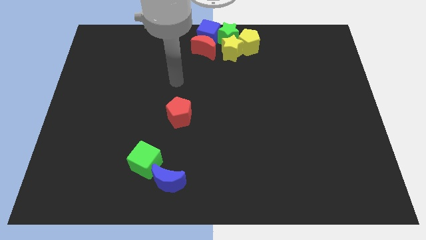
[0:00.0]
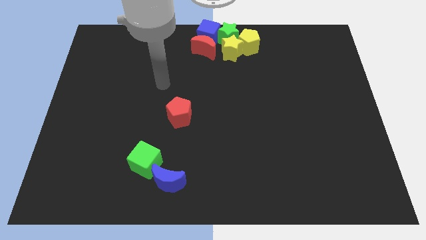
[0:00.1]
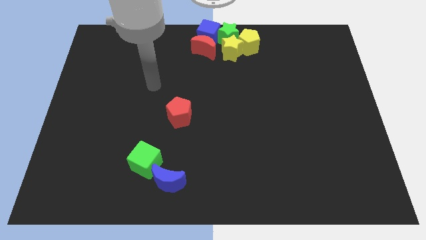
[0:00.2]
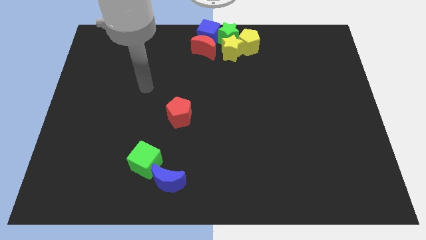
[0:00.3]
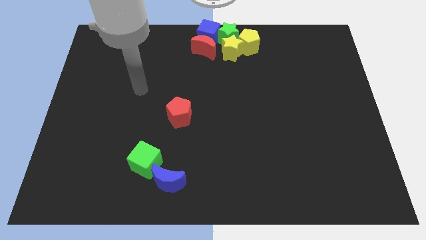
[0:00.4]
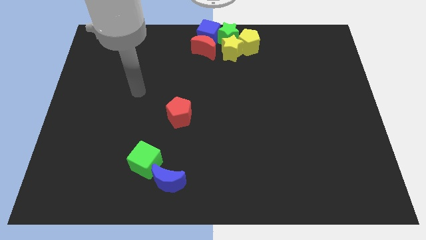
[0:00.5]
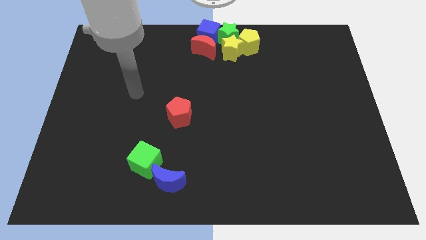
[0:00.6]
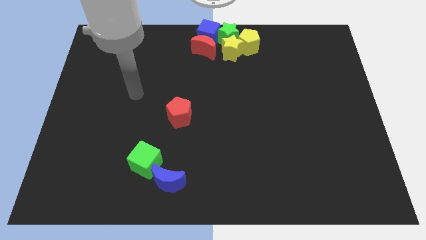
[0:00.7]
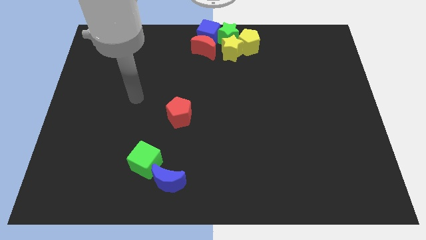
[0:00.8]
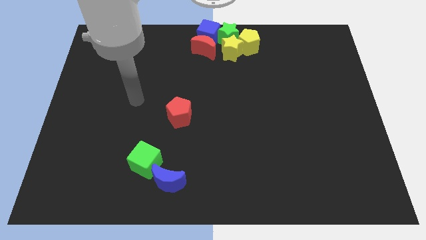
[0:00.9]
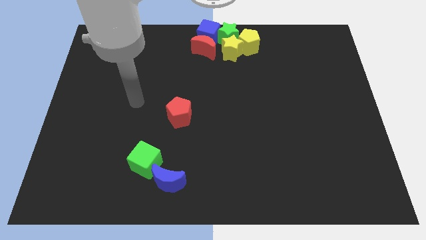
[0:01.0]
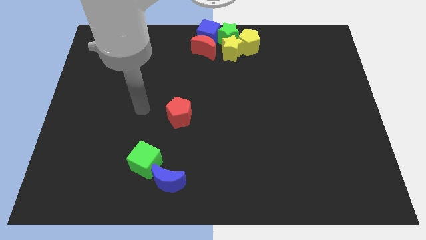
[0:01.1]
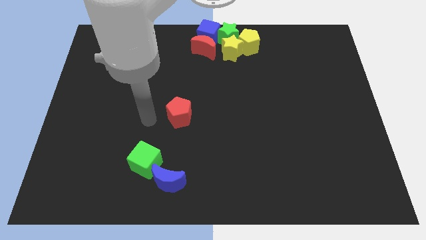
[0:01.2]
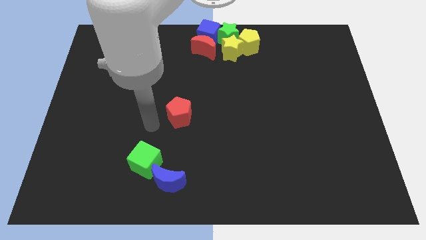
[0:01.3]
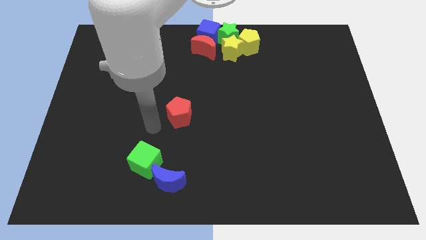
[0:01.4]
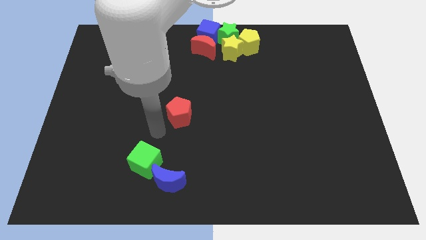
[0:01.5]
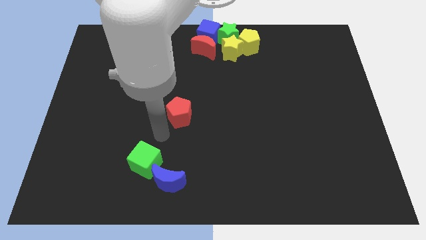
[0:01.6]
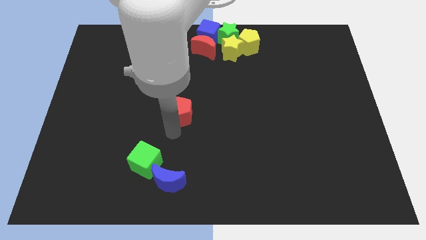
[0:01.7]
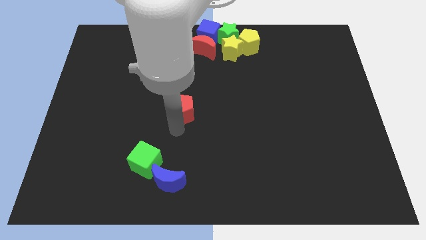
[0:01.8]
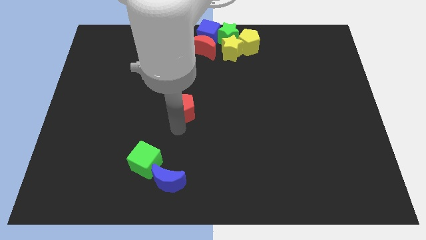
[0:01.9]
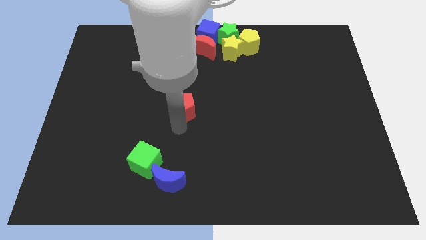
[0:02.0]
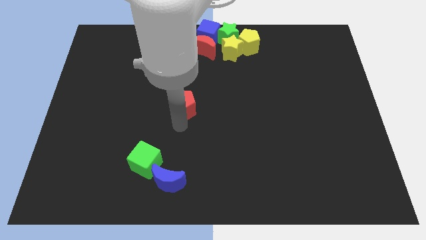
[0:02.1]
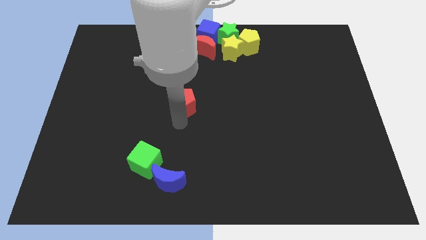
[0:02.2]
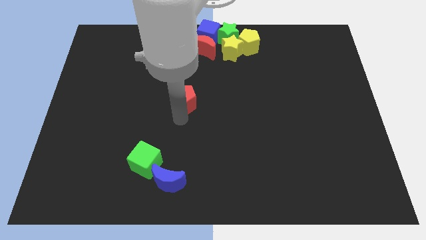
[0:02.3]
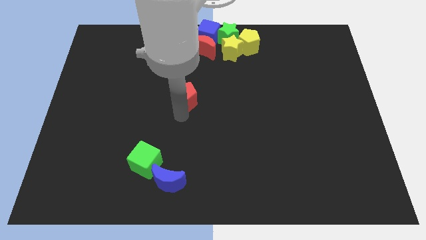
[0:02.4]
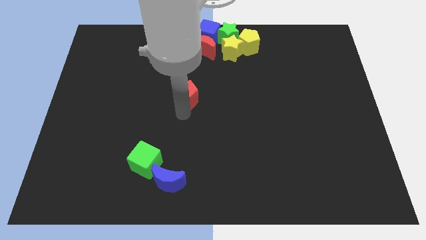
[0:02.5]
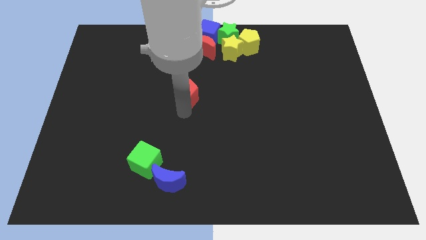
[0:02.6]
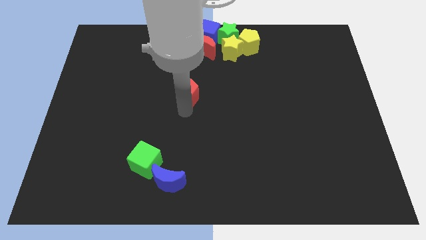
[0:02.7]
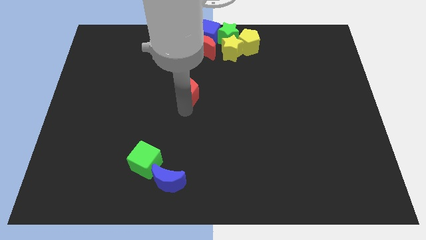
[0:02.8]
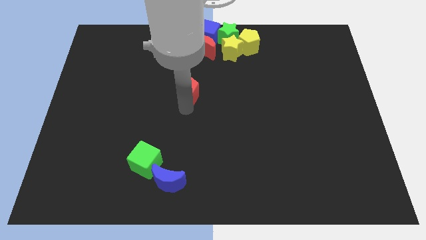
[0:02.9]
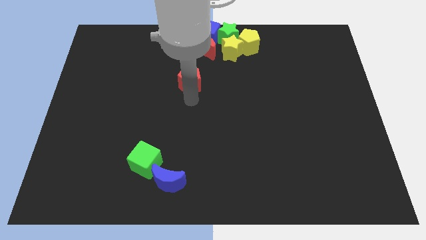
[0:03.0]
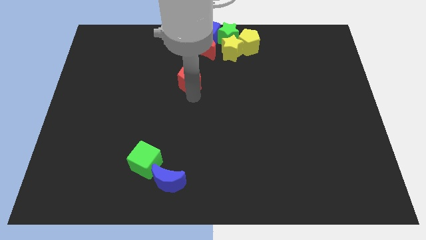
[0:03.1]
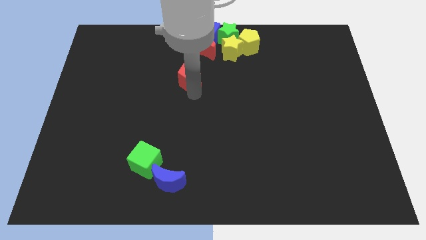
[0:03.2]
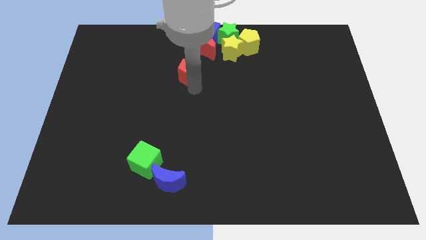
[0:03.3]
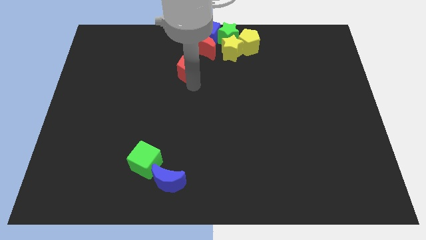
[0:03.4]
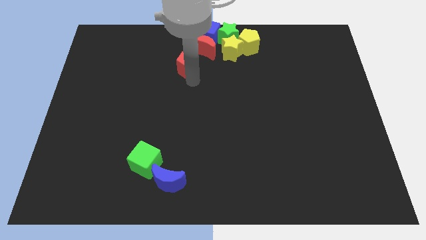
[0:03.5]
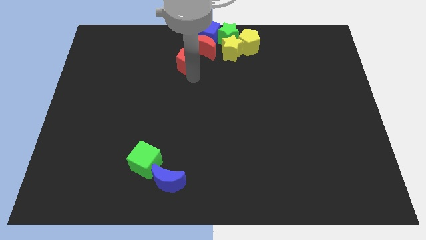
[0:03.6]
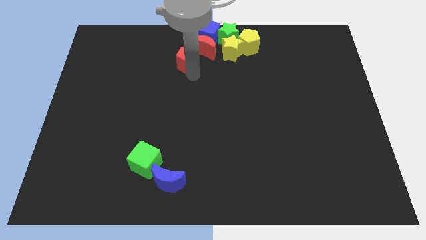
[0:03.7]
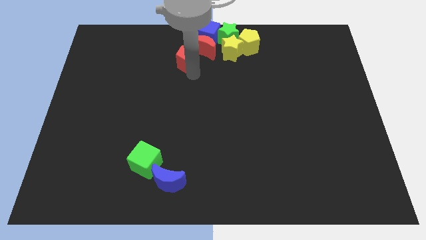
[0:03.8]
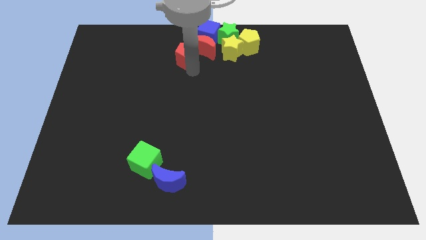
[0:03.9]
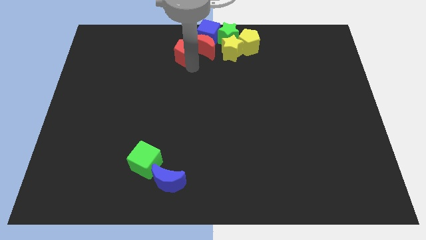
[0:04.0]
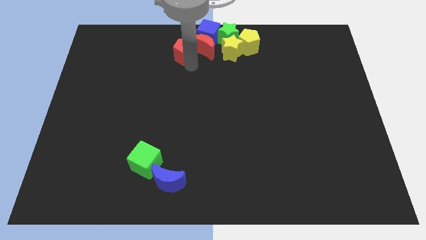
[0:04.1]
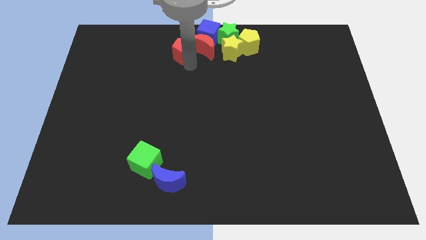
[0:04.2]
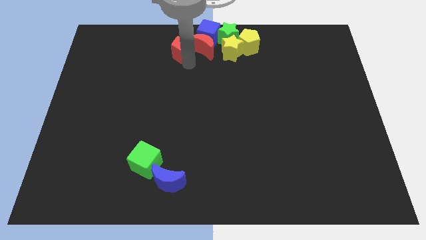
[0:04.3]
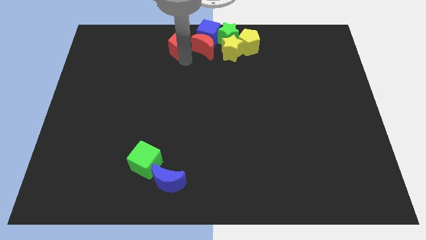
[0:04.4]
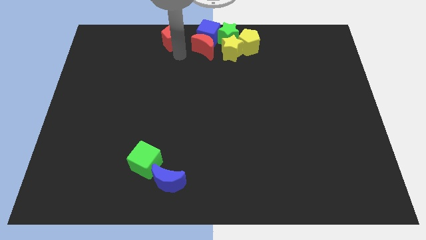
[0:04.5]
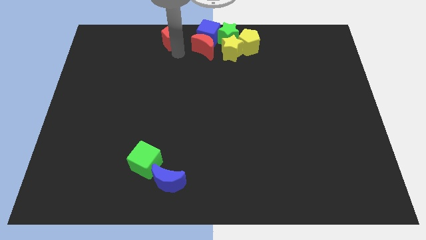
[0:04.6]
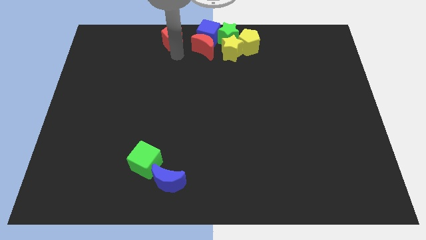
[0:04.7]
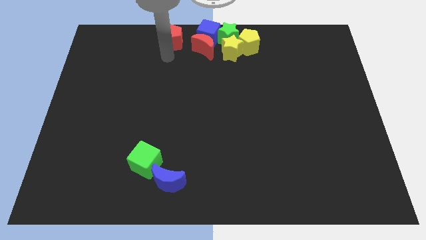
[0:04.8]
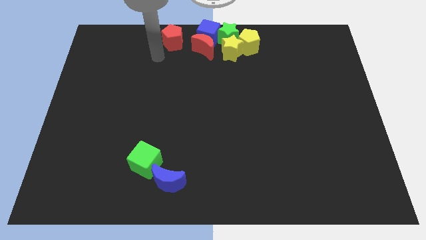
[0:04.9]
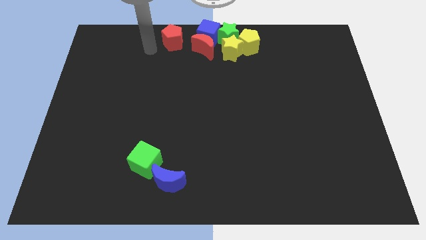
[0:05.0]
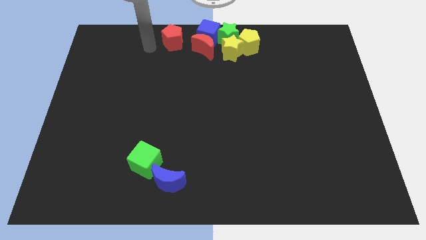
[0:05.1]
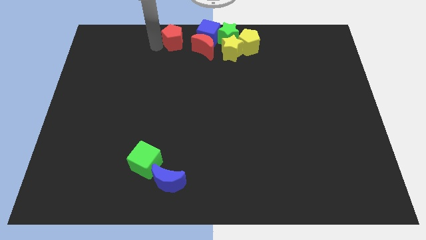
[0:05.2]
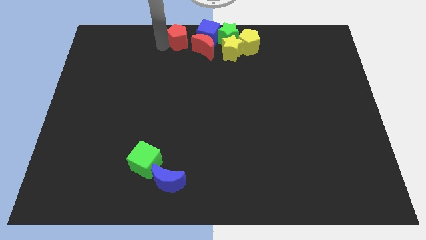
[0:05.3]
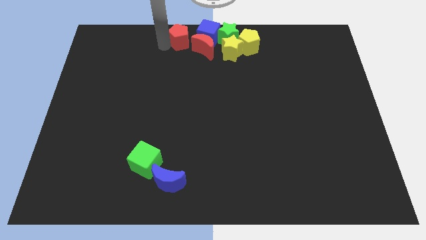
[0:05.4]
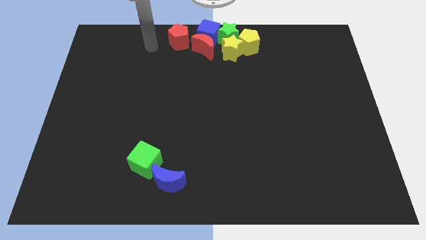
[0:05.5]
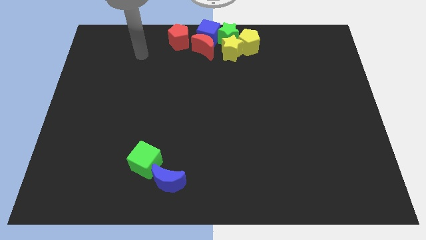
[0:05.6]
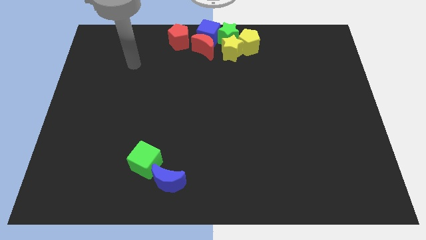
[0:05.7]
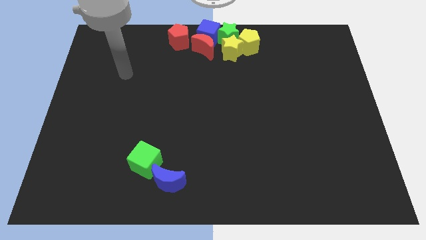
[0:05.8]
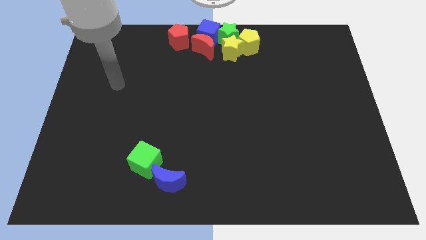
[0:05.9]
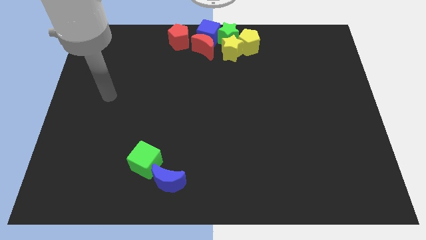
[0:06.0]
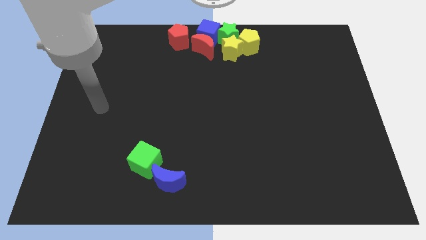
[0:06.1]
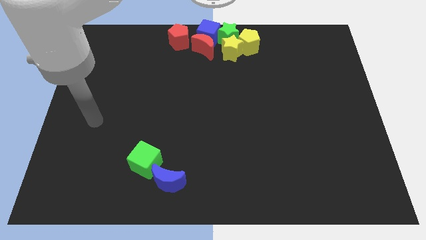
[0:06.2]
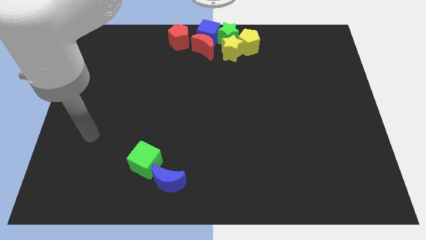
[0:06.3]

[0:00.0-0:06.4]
place the red pentagon to the left of the blue cube

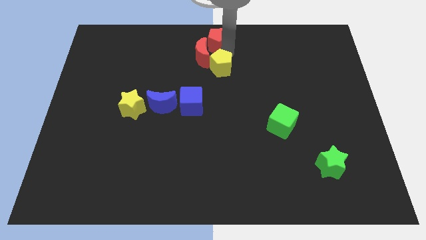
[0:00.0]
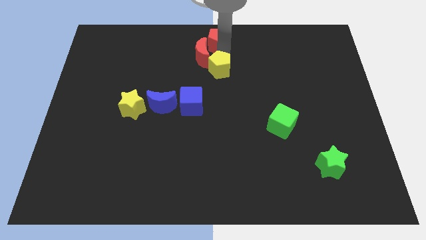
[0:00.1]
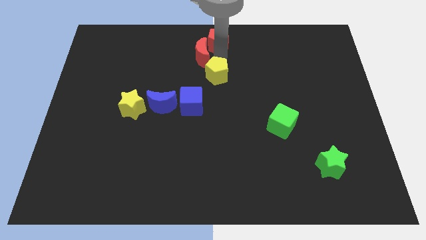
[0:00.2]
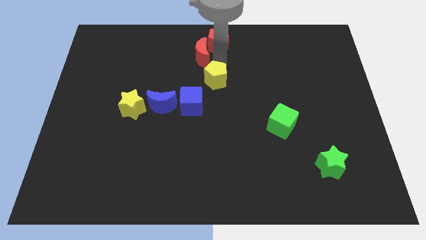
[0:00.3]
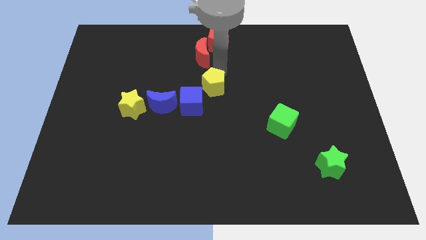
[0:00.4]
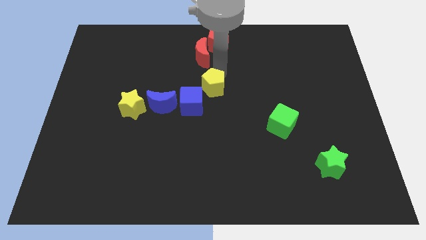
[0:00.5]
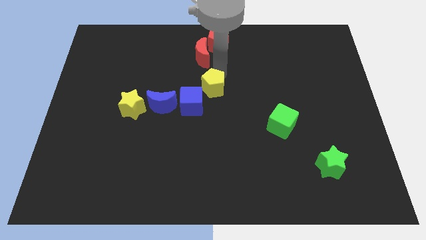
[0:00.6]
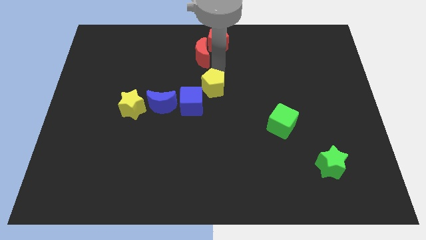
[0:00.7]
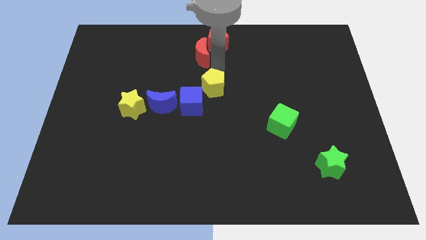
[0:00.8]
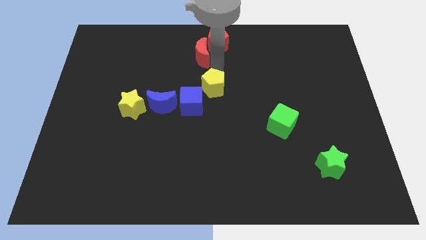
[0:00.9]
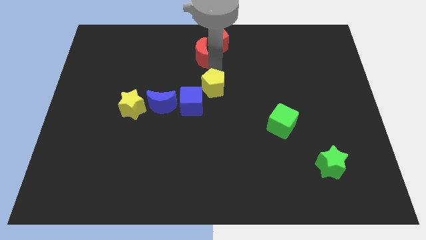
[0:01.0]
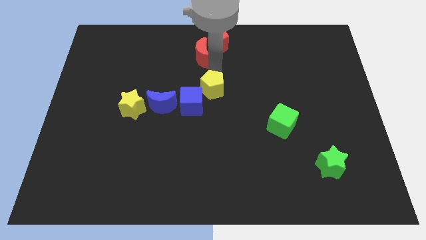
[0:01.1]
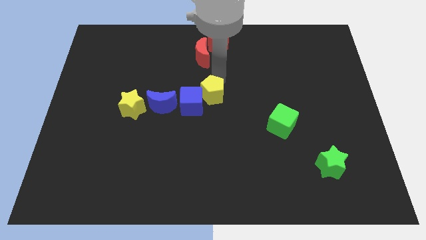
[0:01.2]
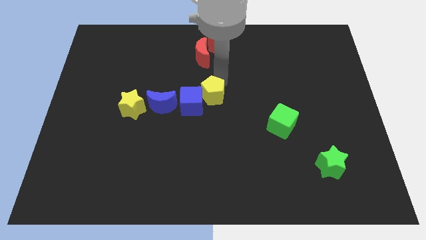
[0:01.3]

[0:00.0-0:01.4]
separate the yellow pentagon from the red pentagon

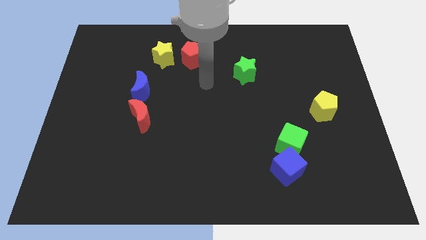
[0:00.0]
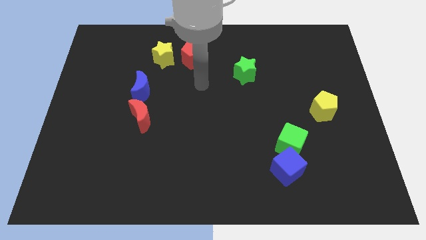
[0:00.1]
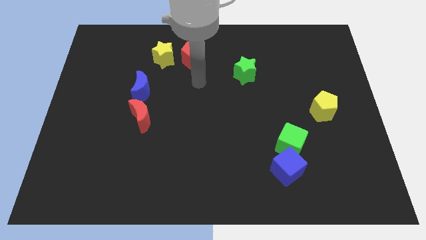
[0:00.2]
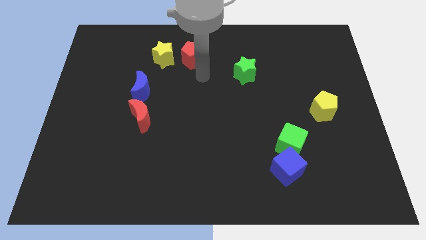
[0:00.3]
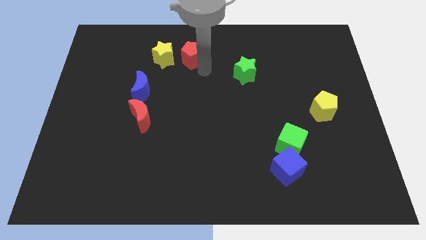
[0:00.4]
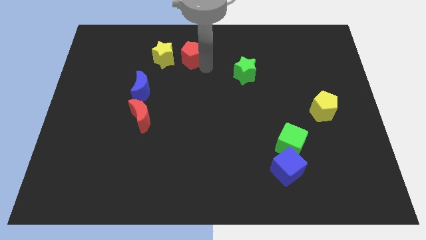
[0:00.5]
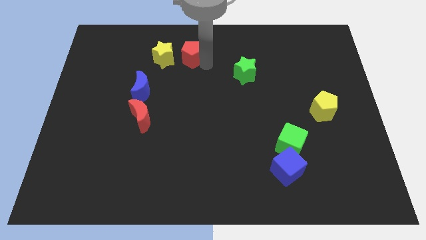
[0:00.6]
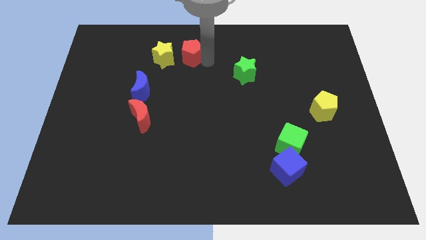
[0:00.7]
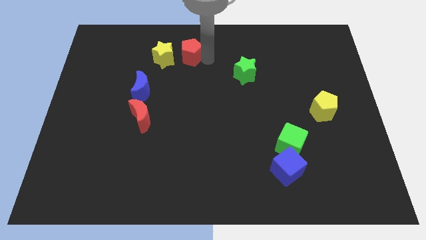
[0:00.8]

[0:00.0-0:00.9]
push the red pentagon slightly towards up

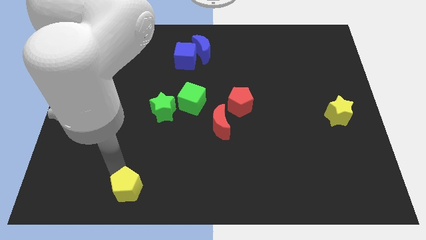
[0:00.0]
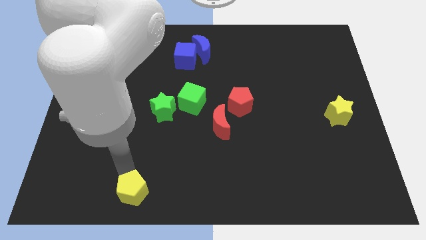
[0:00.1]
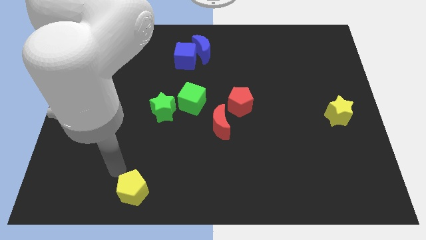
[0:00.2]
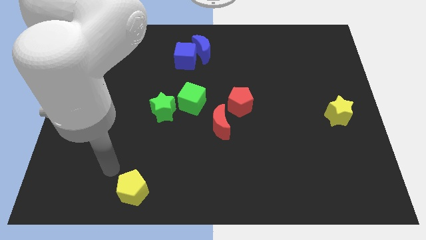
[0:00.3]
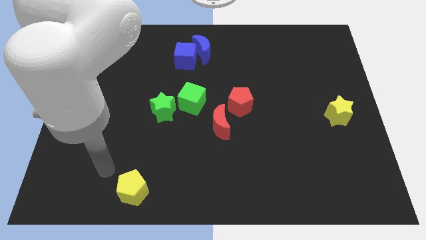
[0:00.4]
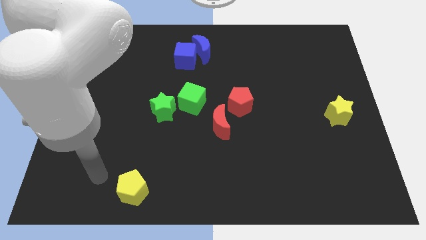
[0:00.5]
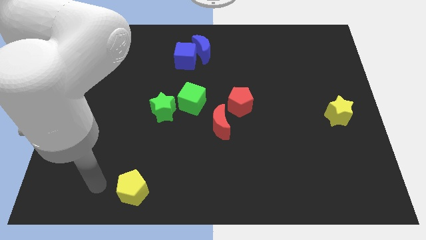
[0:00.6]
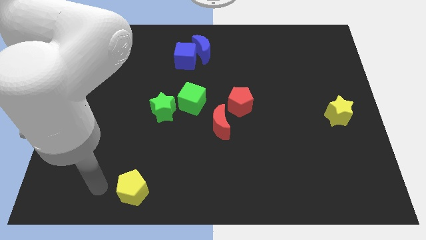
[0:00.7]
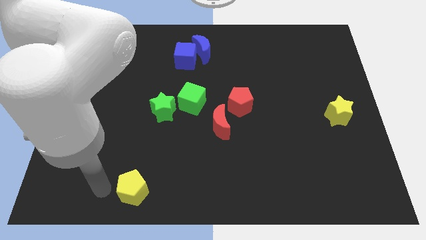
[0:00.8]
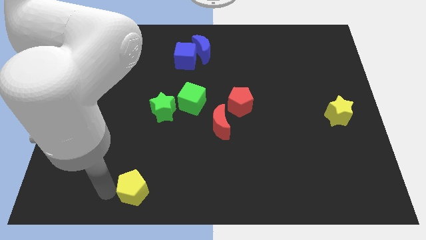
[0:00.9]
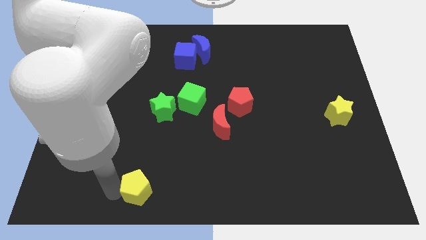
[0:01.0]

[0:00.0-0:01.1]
push yellow pentagon slightly to the right
